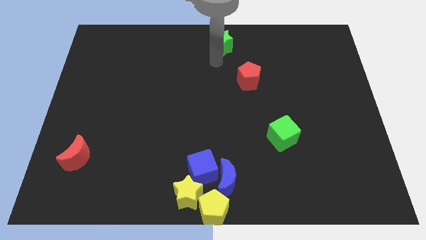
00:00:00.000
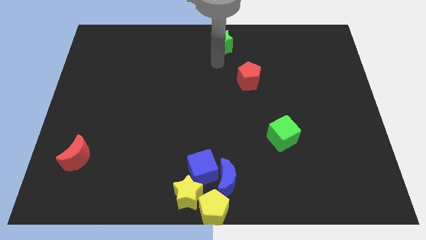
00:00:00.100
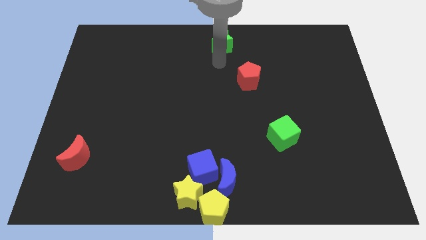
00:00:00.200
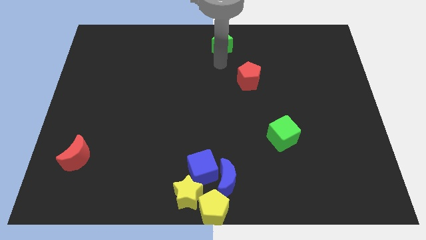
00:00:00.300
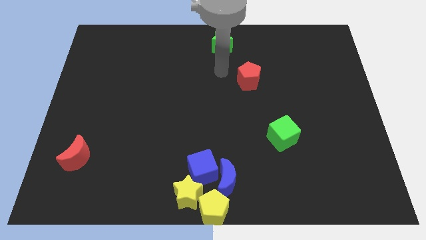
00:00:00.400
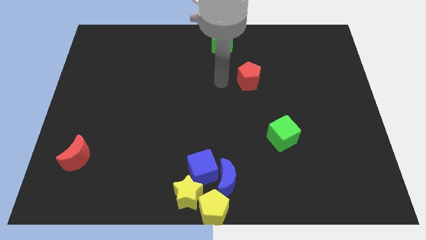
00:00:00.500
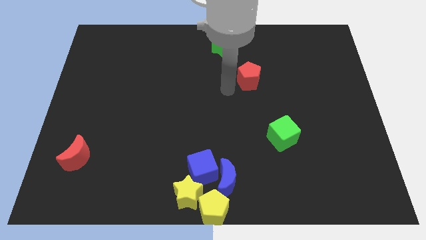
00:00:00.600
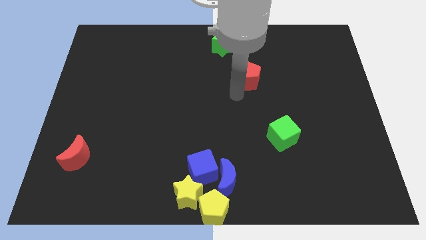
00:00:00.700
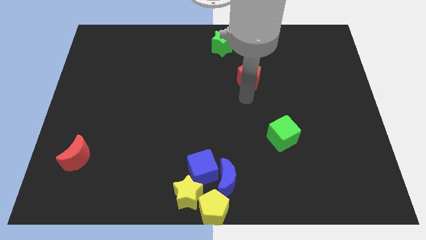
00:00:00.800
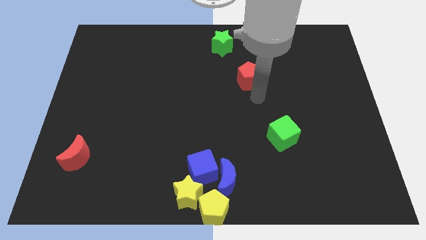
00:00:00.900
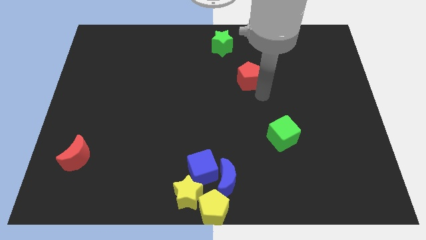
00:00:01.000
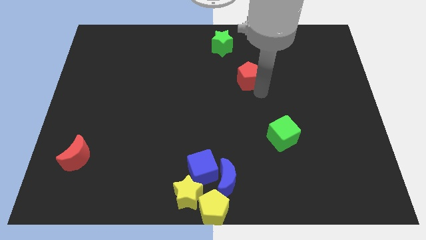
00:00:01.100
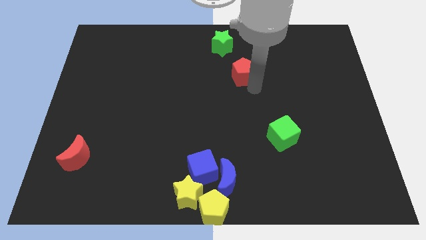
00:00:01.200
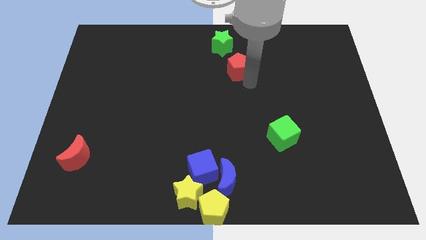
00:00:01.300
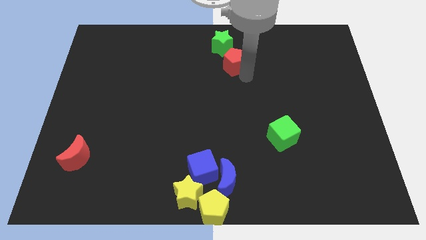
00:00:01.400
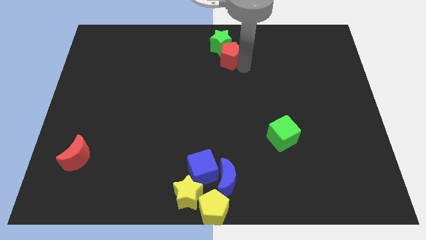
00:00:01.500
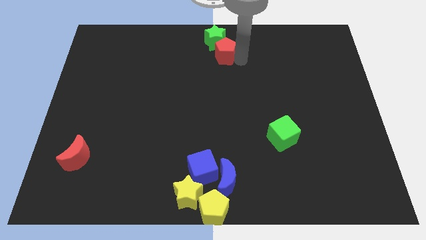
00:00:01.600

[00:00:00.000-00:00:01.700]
push red pentagon into green star

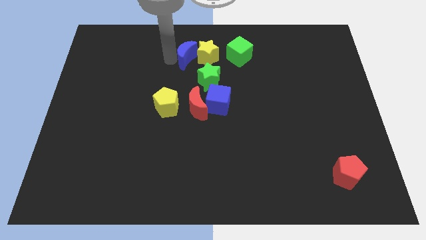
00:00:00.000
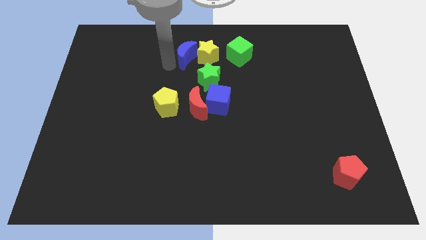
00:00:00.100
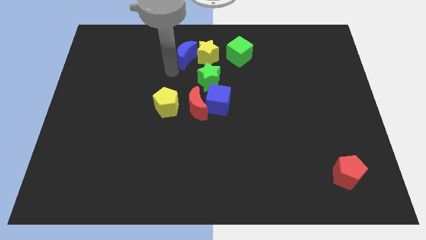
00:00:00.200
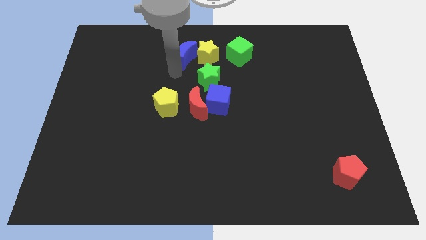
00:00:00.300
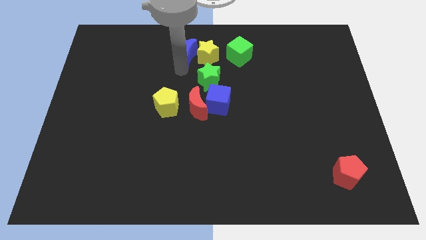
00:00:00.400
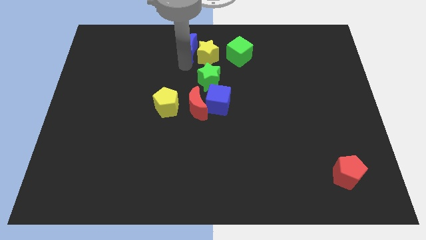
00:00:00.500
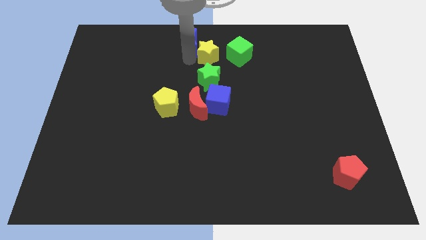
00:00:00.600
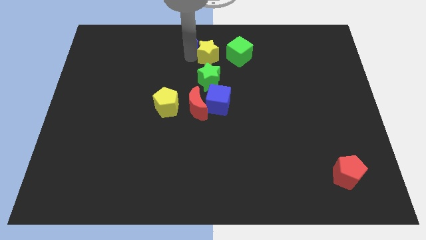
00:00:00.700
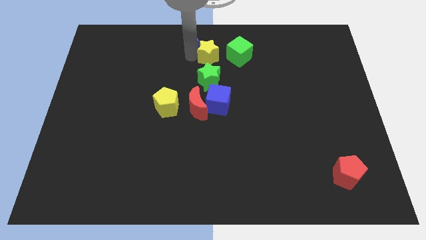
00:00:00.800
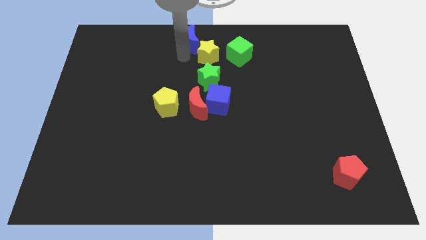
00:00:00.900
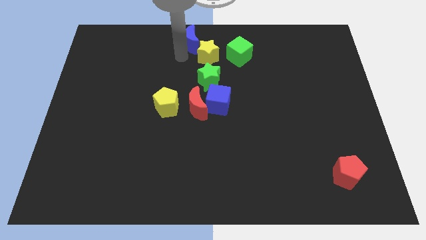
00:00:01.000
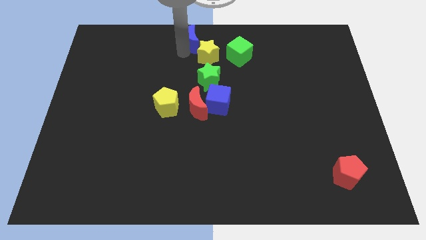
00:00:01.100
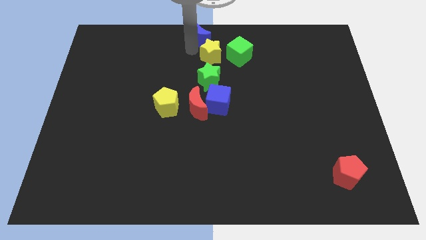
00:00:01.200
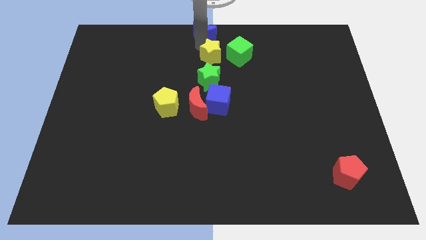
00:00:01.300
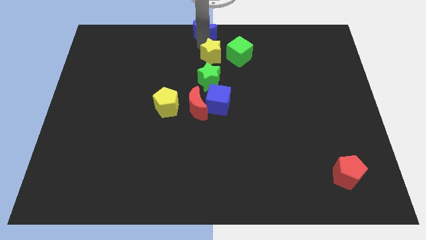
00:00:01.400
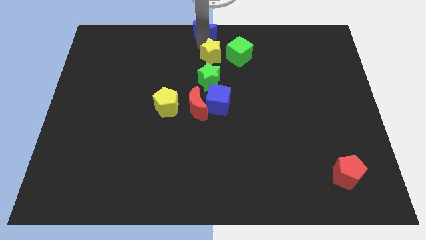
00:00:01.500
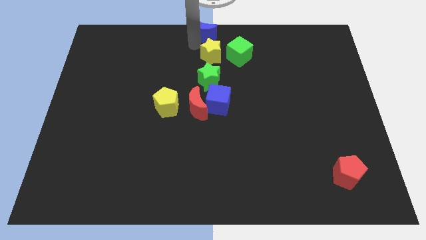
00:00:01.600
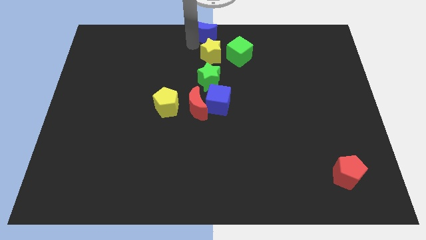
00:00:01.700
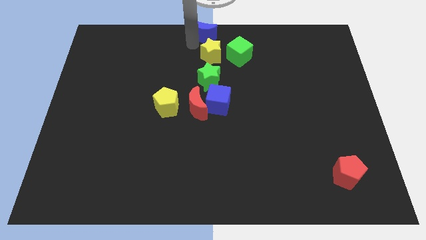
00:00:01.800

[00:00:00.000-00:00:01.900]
place blue crescent to the top center of the board

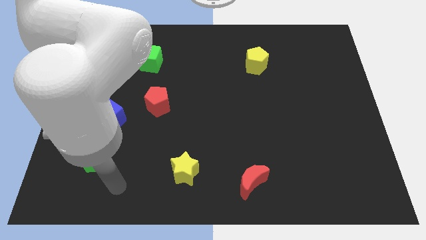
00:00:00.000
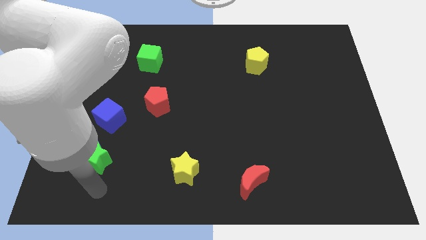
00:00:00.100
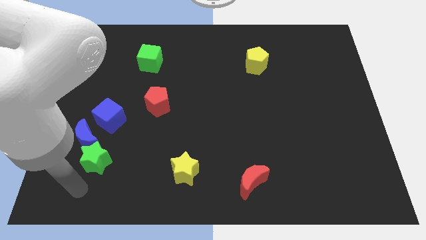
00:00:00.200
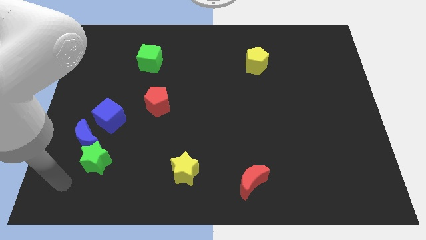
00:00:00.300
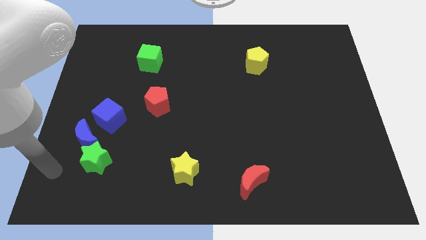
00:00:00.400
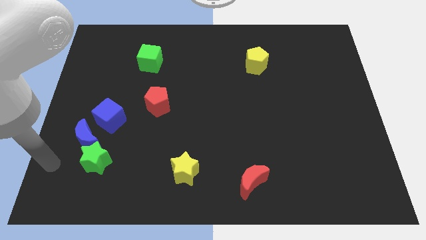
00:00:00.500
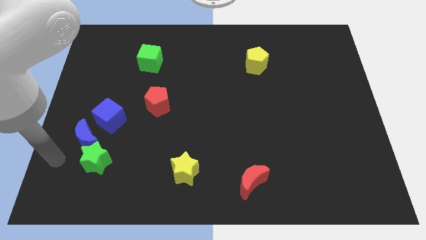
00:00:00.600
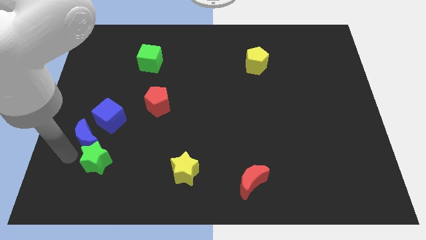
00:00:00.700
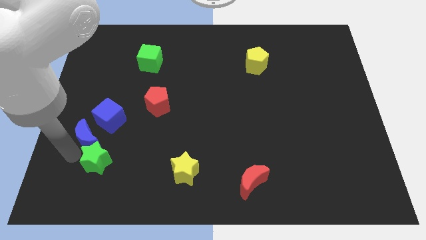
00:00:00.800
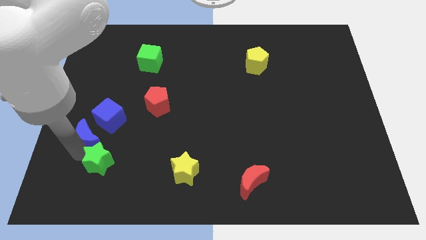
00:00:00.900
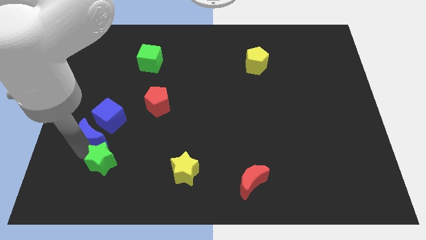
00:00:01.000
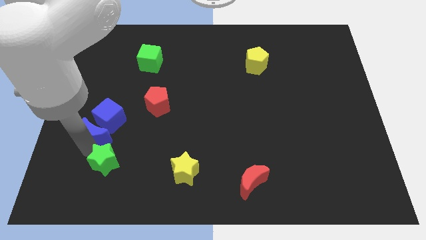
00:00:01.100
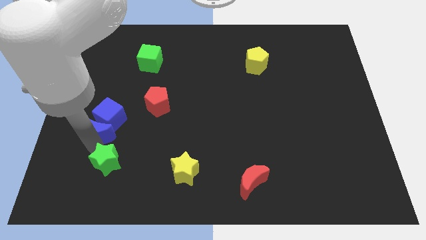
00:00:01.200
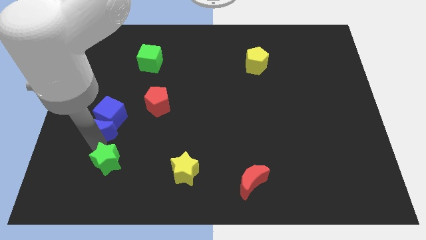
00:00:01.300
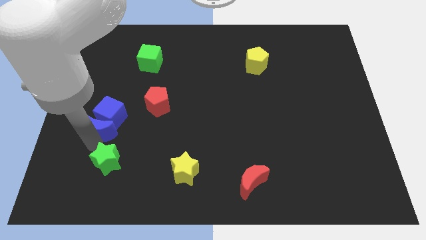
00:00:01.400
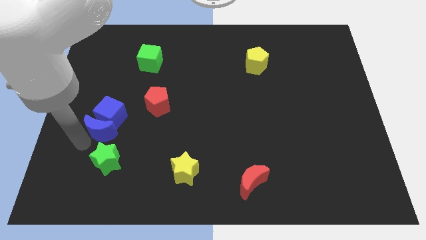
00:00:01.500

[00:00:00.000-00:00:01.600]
separate the blue moon and green star

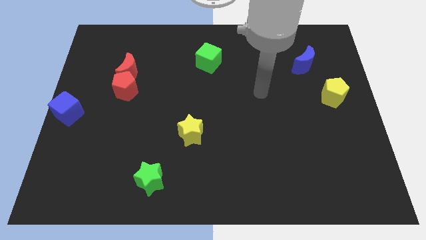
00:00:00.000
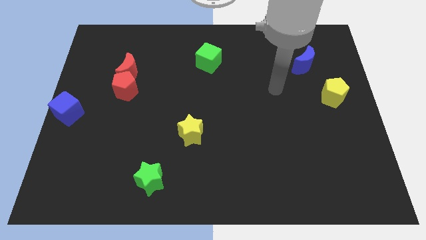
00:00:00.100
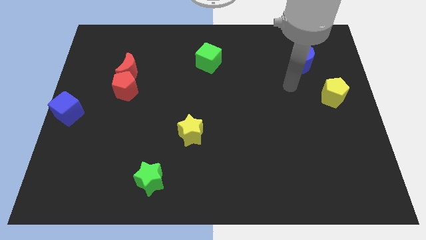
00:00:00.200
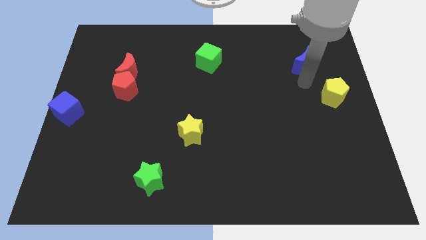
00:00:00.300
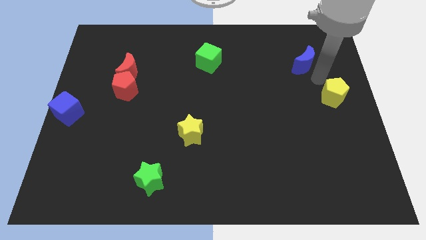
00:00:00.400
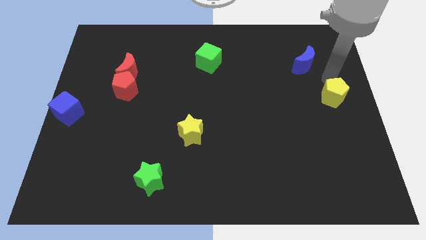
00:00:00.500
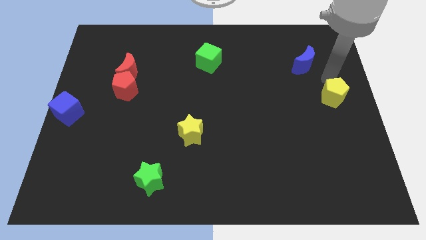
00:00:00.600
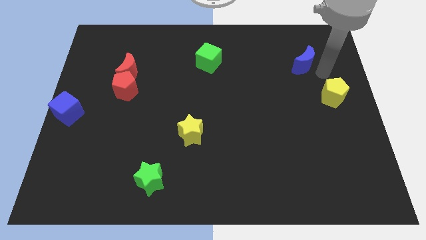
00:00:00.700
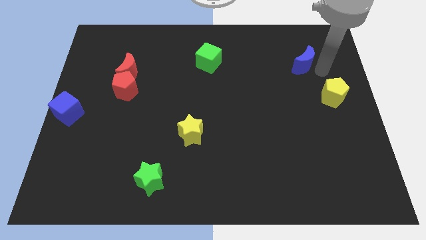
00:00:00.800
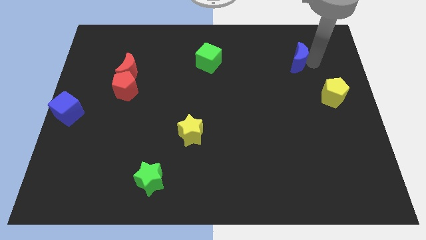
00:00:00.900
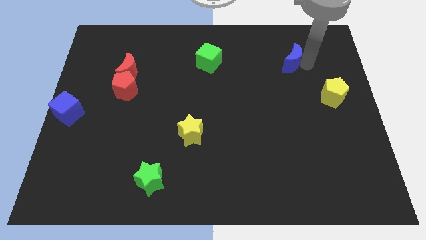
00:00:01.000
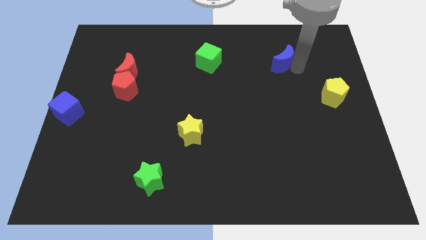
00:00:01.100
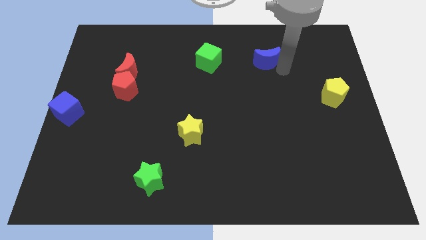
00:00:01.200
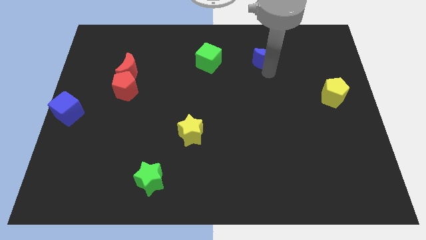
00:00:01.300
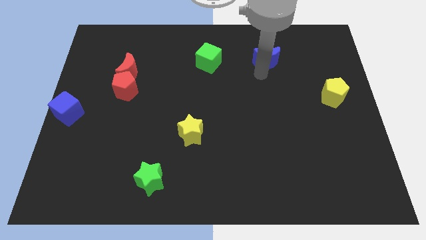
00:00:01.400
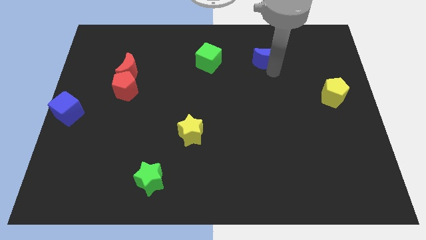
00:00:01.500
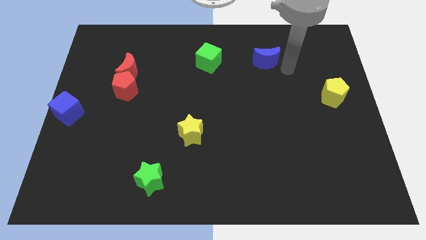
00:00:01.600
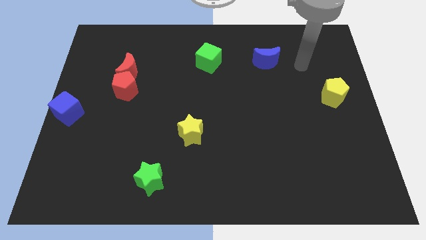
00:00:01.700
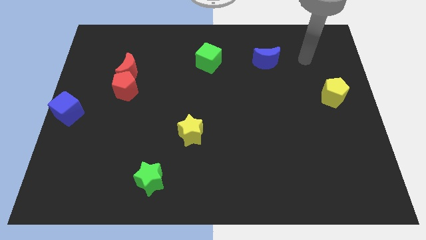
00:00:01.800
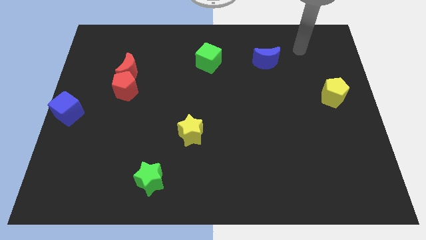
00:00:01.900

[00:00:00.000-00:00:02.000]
push the blue moon towards the green cube

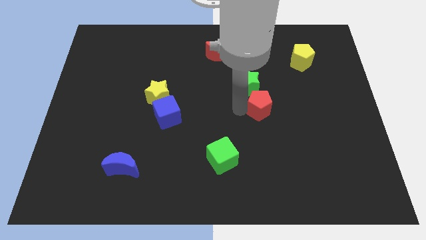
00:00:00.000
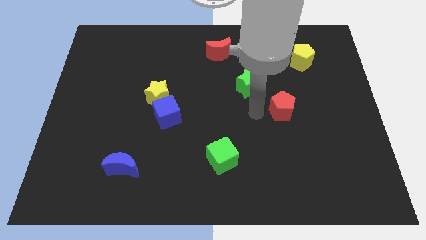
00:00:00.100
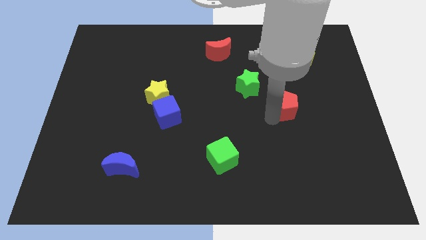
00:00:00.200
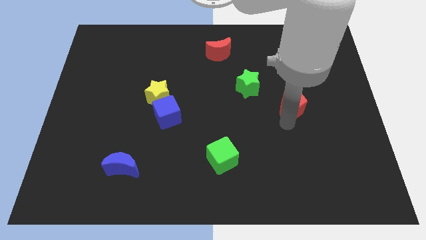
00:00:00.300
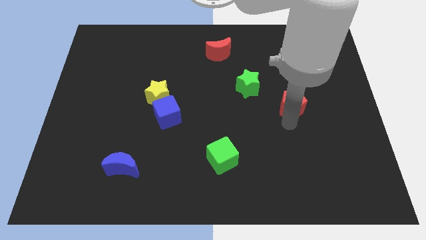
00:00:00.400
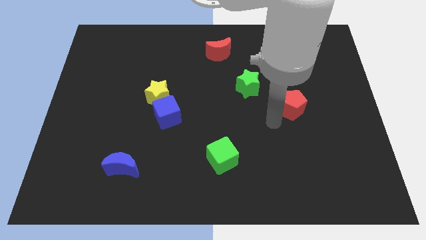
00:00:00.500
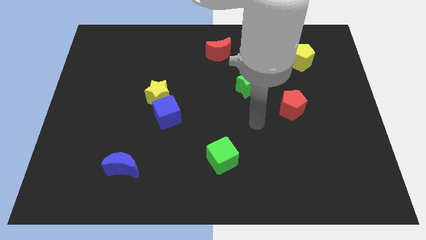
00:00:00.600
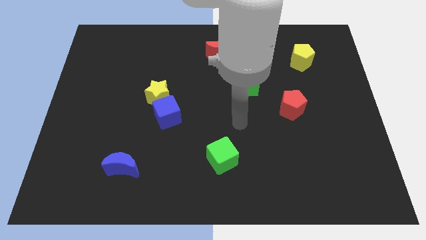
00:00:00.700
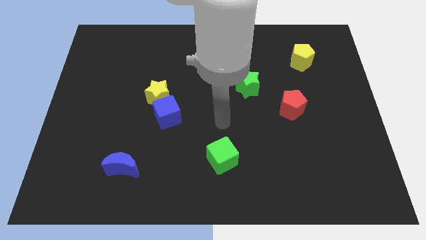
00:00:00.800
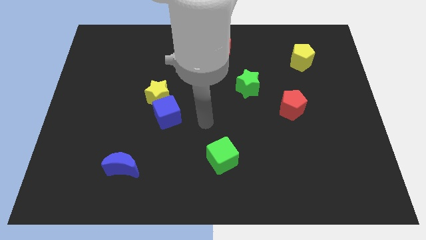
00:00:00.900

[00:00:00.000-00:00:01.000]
push the red pentagon at the bottom side of the yellow pentagon

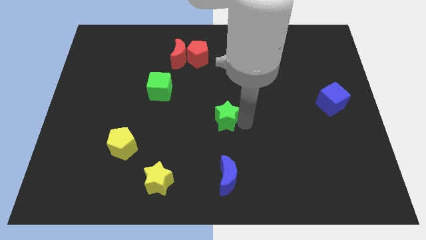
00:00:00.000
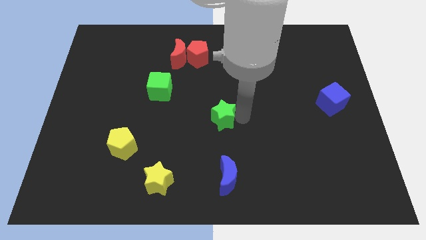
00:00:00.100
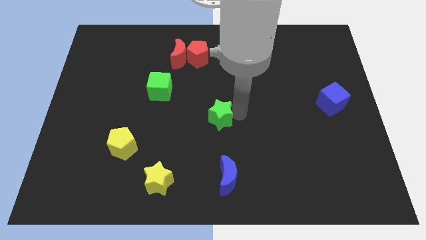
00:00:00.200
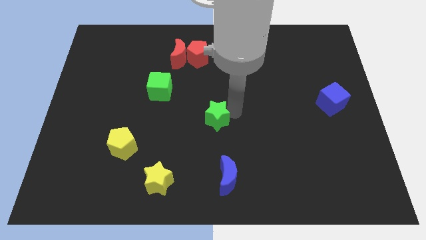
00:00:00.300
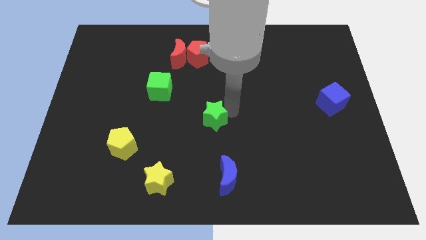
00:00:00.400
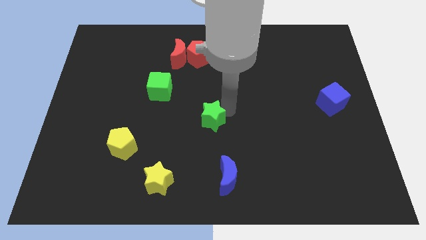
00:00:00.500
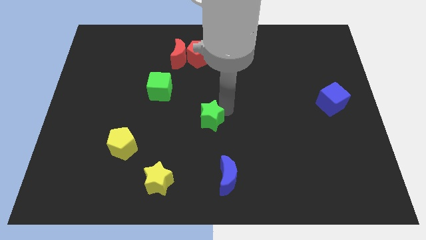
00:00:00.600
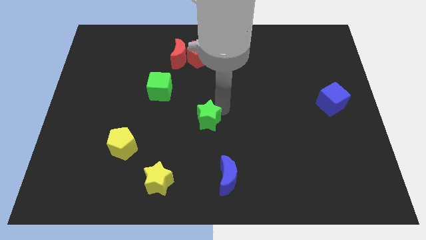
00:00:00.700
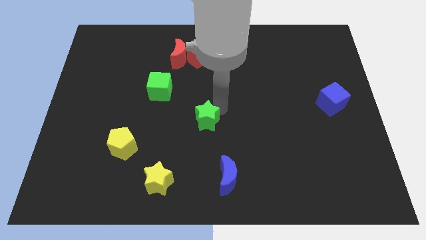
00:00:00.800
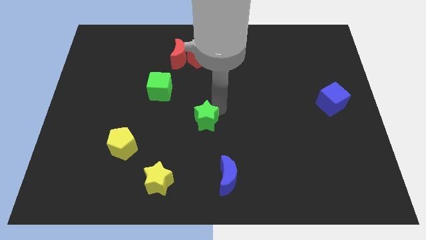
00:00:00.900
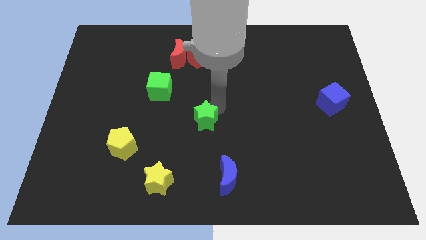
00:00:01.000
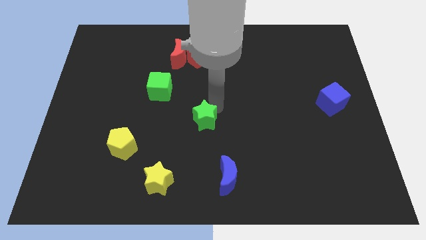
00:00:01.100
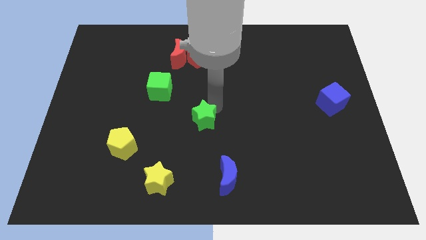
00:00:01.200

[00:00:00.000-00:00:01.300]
push the green star to the center of the board
